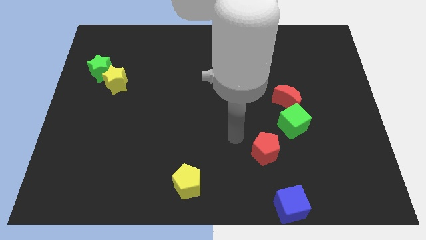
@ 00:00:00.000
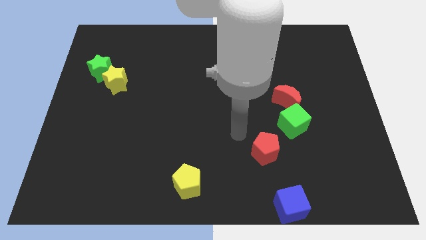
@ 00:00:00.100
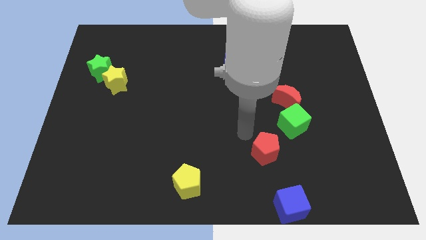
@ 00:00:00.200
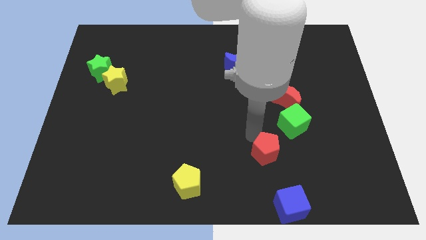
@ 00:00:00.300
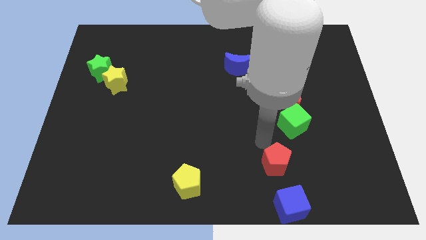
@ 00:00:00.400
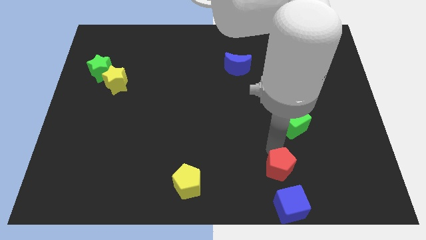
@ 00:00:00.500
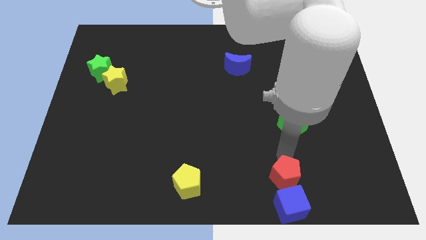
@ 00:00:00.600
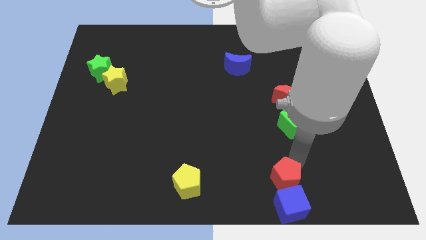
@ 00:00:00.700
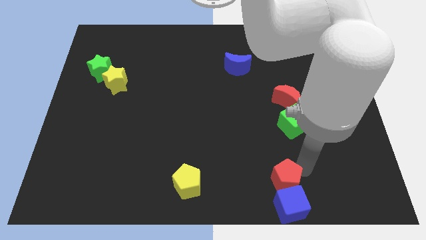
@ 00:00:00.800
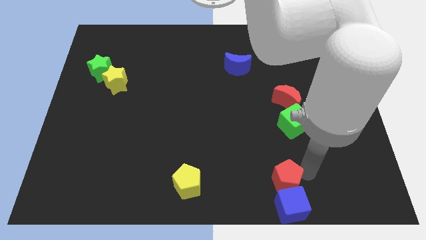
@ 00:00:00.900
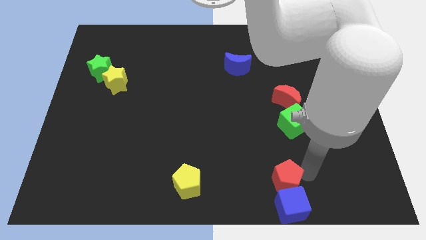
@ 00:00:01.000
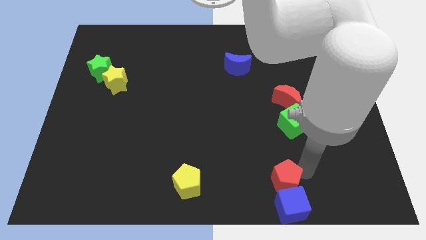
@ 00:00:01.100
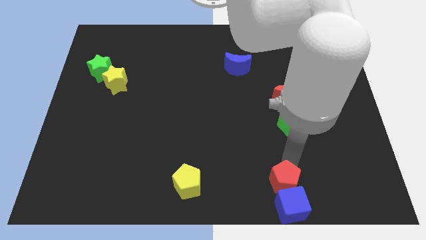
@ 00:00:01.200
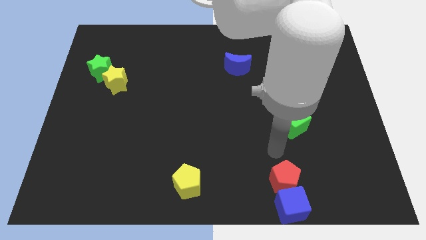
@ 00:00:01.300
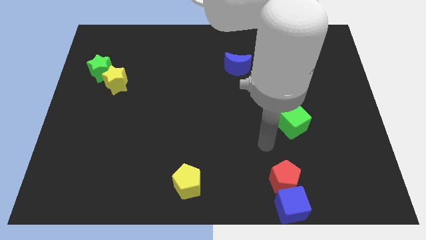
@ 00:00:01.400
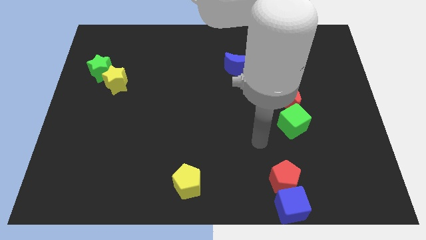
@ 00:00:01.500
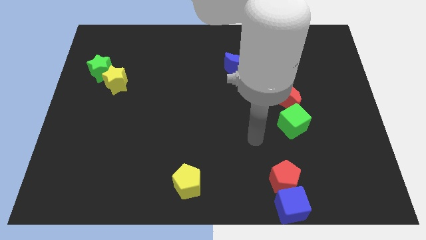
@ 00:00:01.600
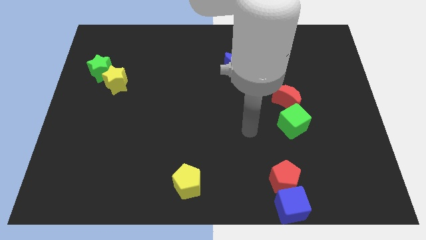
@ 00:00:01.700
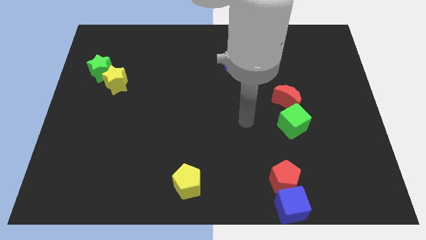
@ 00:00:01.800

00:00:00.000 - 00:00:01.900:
move the red pentagon towards the blue cube

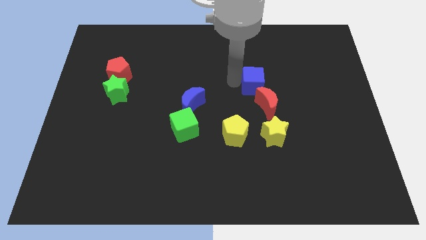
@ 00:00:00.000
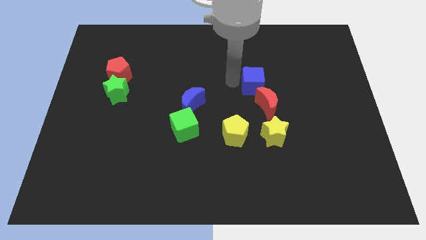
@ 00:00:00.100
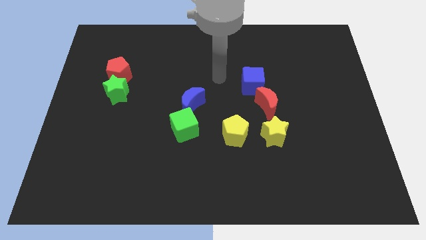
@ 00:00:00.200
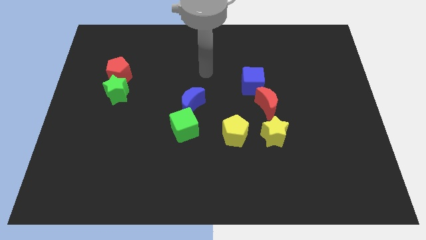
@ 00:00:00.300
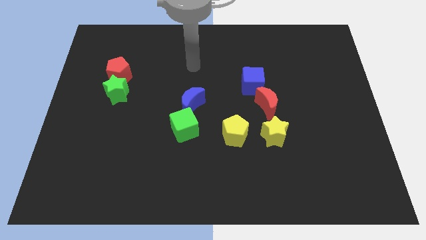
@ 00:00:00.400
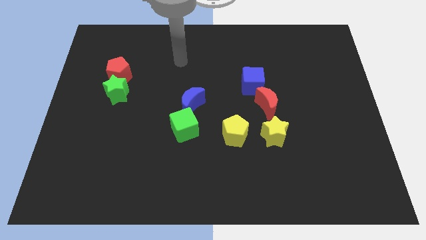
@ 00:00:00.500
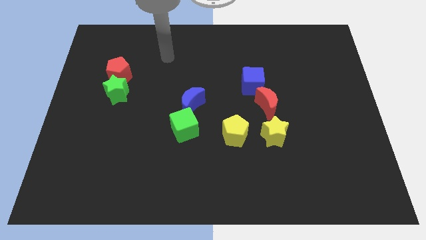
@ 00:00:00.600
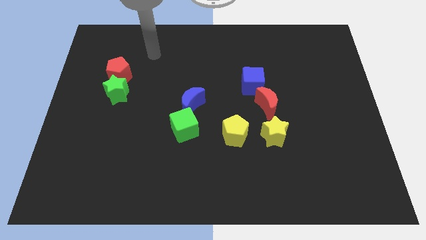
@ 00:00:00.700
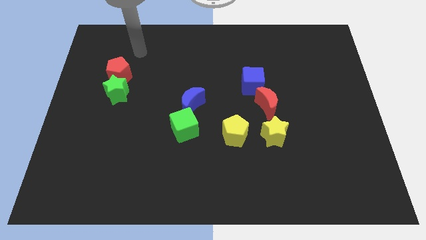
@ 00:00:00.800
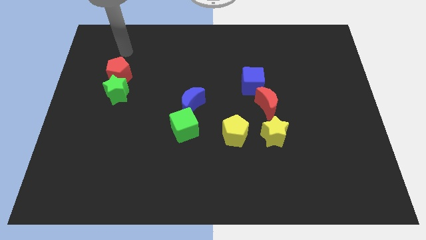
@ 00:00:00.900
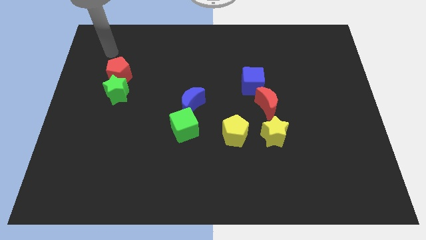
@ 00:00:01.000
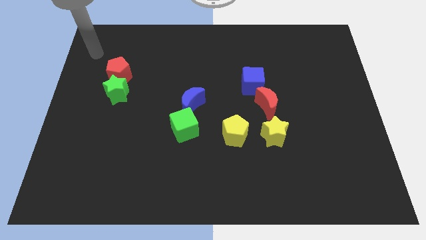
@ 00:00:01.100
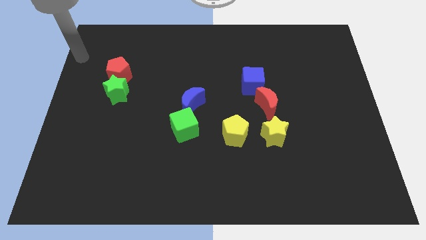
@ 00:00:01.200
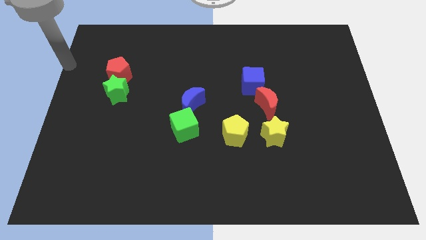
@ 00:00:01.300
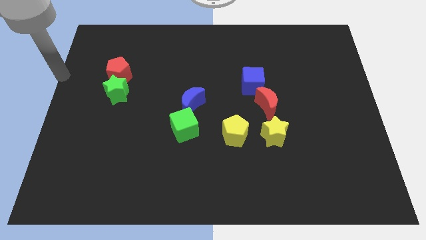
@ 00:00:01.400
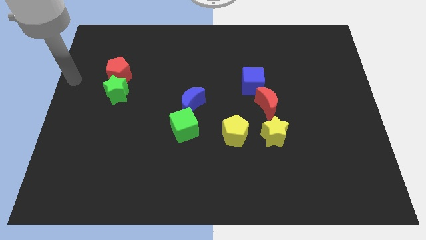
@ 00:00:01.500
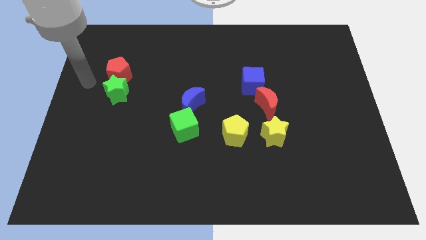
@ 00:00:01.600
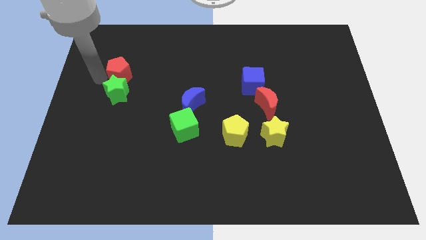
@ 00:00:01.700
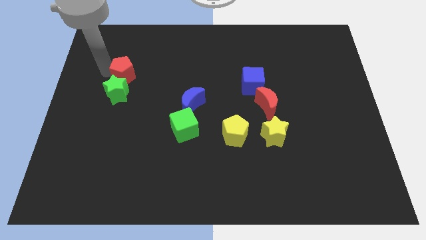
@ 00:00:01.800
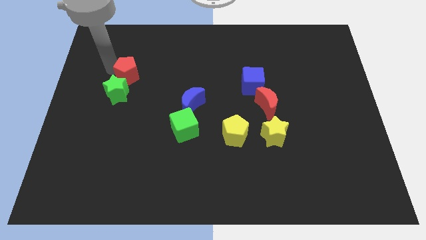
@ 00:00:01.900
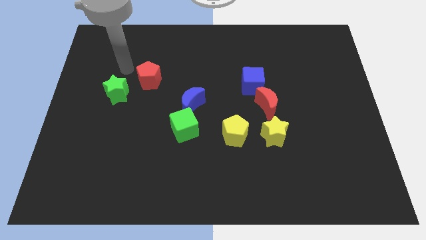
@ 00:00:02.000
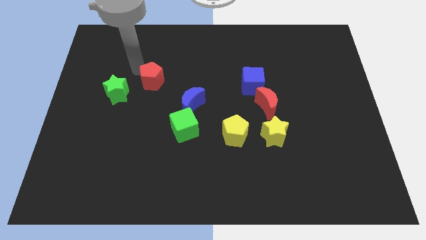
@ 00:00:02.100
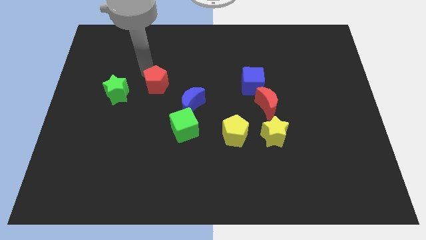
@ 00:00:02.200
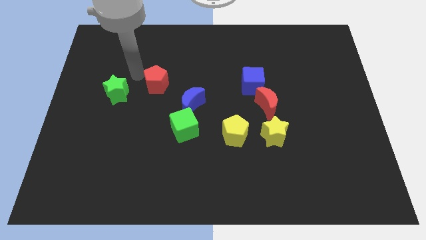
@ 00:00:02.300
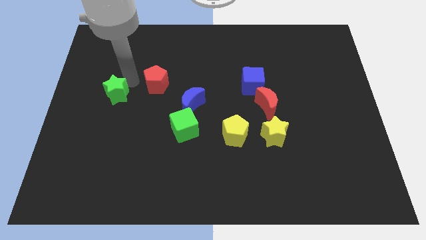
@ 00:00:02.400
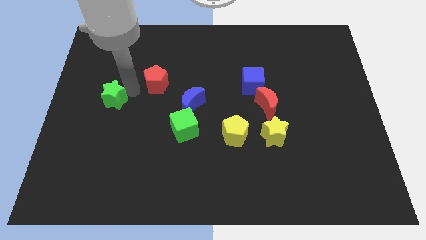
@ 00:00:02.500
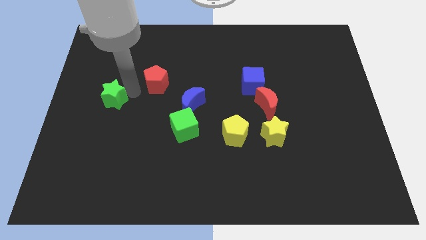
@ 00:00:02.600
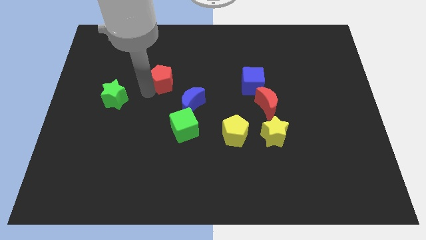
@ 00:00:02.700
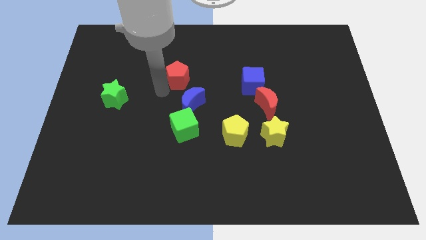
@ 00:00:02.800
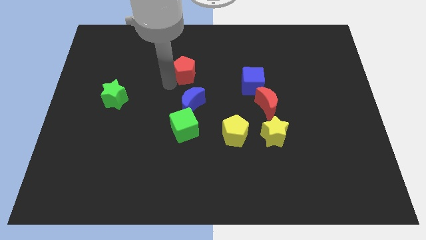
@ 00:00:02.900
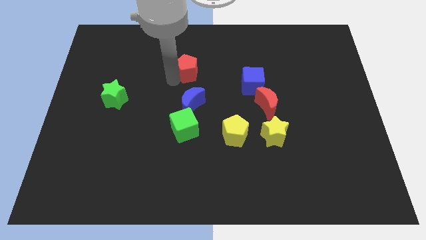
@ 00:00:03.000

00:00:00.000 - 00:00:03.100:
move the red pentagon close to the blue crescent

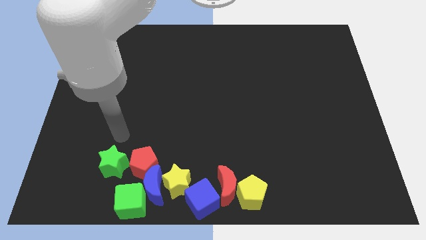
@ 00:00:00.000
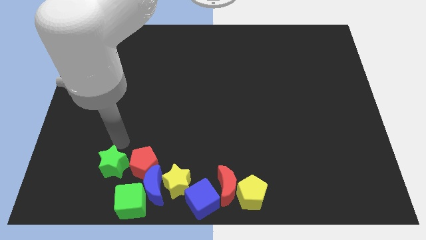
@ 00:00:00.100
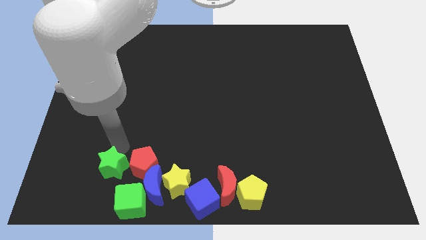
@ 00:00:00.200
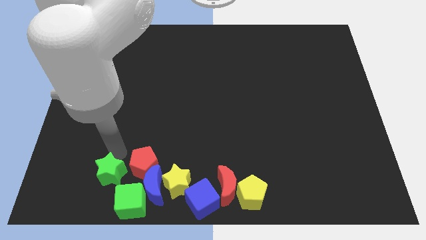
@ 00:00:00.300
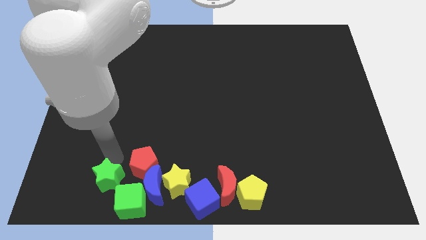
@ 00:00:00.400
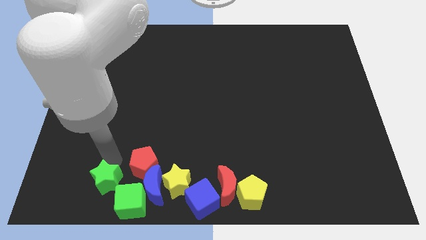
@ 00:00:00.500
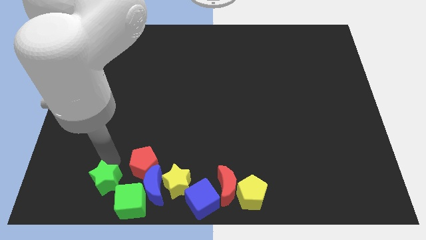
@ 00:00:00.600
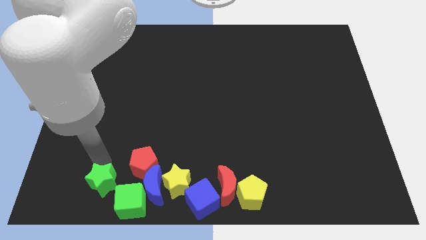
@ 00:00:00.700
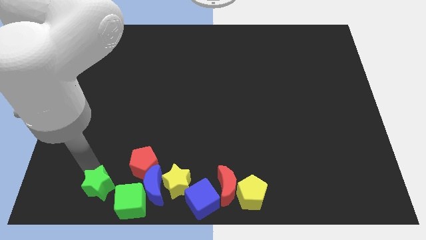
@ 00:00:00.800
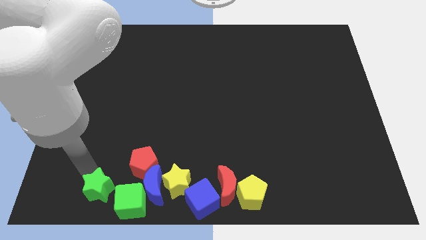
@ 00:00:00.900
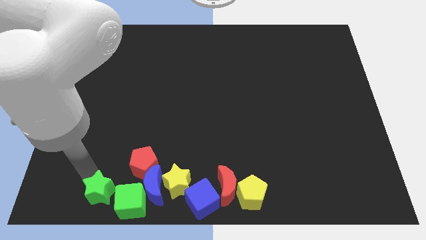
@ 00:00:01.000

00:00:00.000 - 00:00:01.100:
push green star into green cube

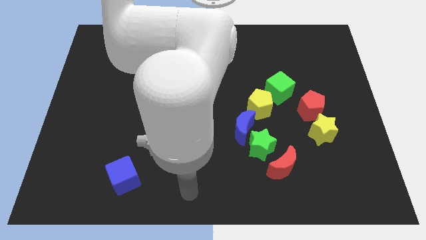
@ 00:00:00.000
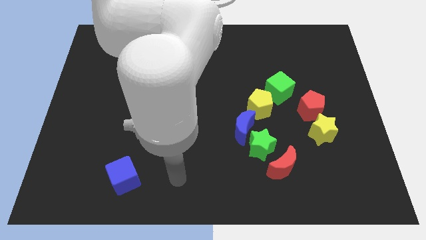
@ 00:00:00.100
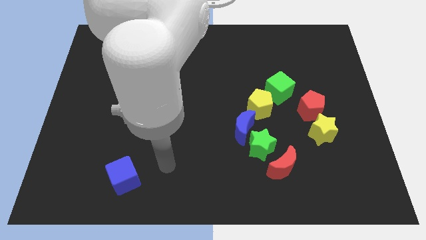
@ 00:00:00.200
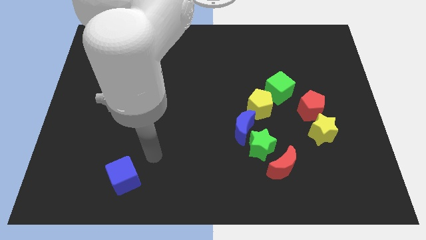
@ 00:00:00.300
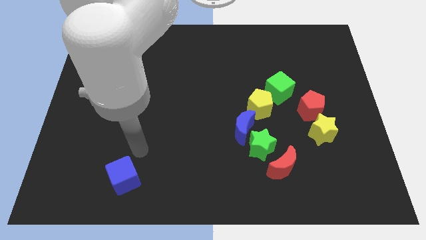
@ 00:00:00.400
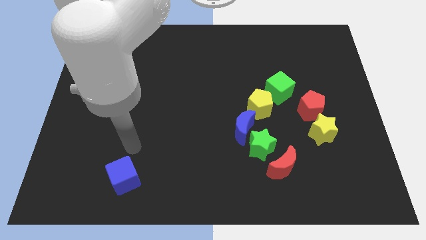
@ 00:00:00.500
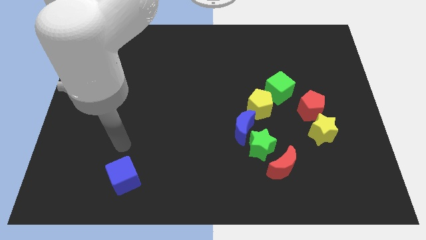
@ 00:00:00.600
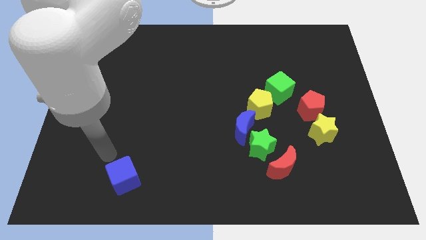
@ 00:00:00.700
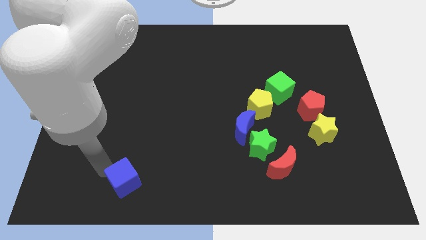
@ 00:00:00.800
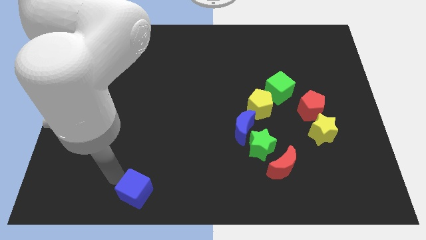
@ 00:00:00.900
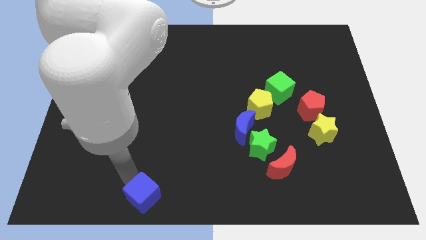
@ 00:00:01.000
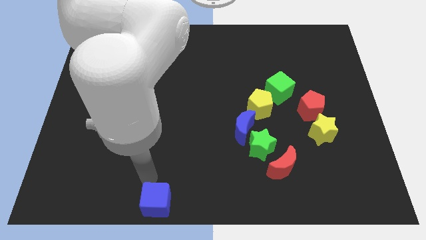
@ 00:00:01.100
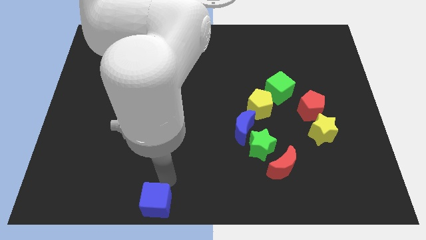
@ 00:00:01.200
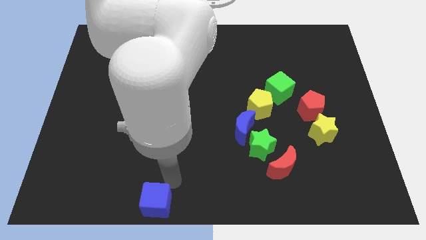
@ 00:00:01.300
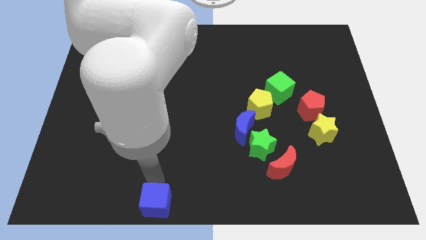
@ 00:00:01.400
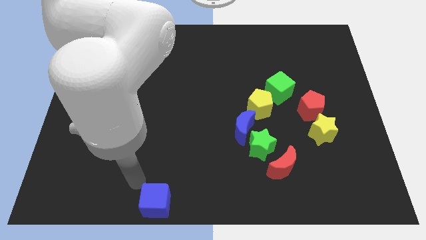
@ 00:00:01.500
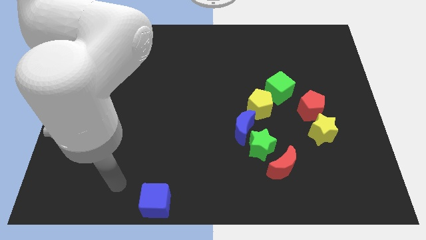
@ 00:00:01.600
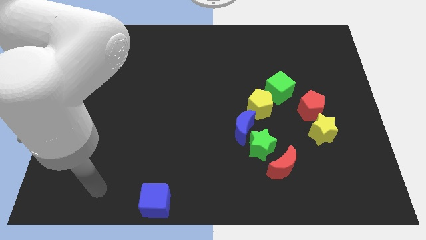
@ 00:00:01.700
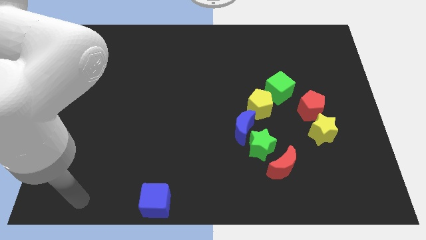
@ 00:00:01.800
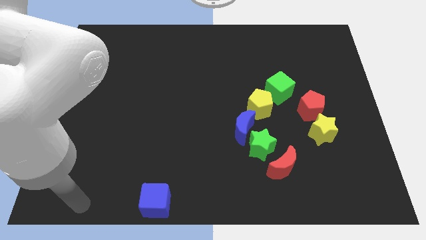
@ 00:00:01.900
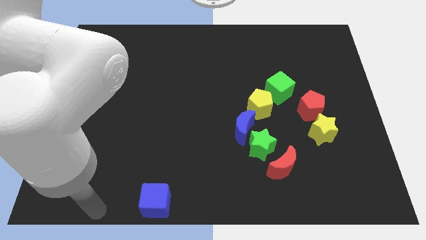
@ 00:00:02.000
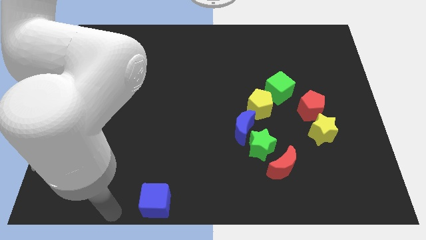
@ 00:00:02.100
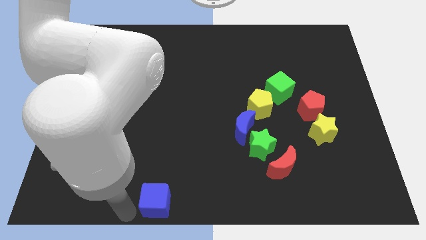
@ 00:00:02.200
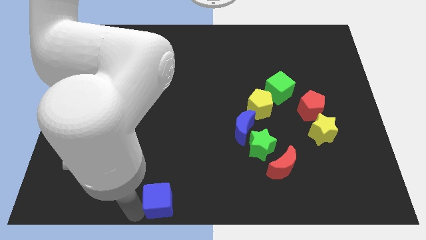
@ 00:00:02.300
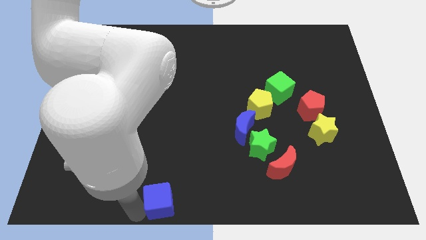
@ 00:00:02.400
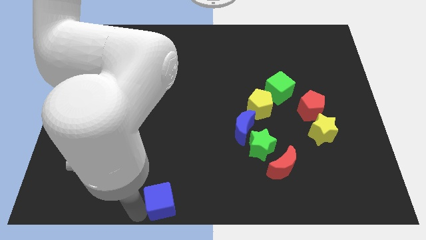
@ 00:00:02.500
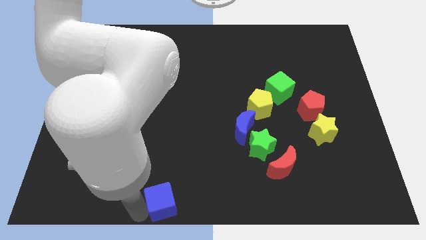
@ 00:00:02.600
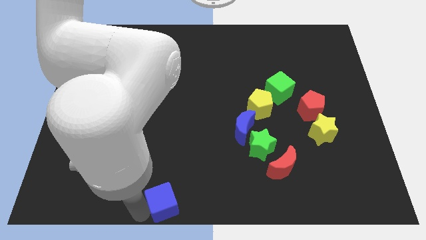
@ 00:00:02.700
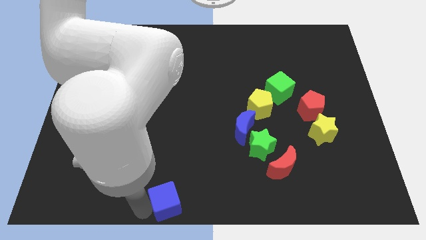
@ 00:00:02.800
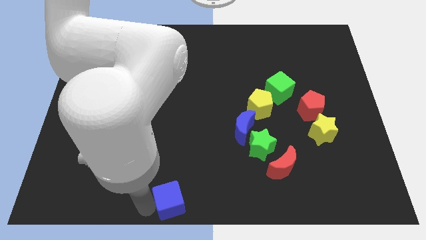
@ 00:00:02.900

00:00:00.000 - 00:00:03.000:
move the blue cube to bottom
